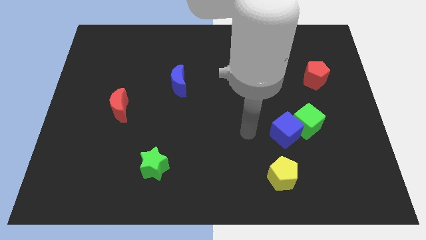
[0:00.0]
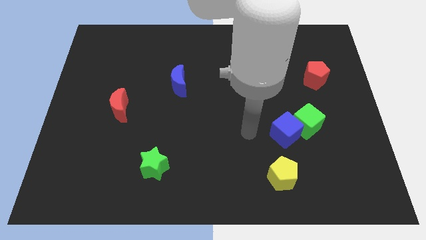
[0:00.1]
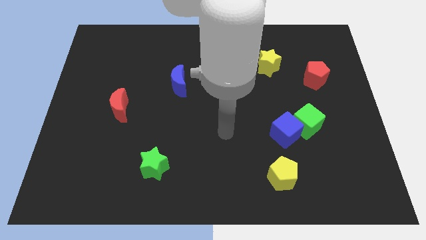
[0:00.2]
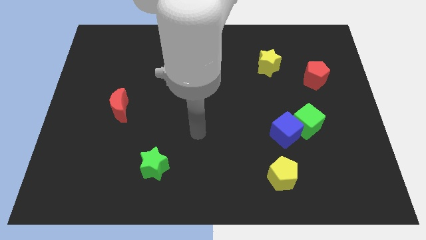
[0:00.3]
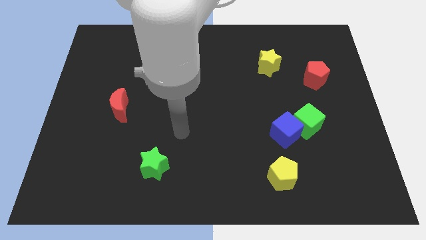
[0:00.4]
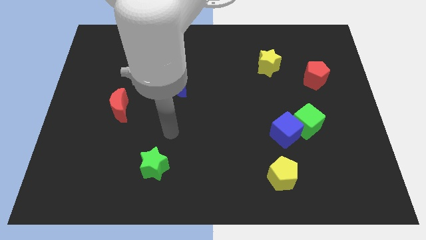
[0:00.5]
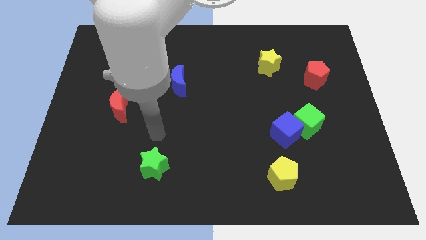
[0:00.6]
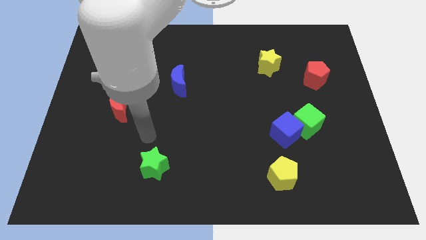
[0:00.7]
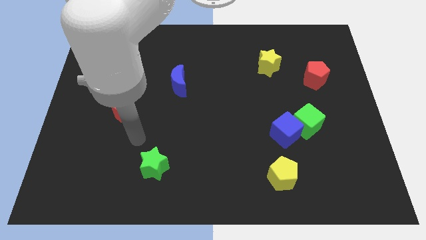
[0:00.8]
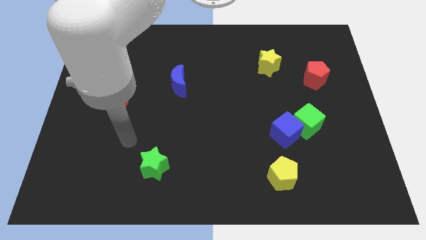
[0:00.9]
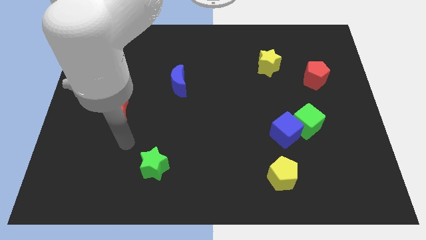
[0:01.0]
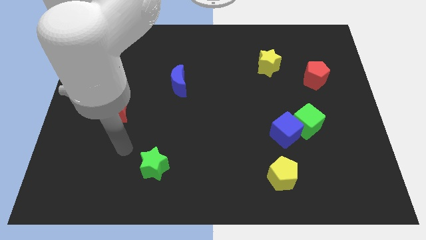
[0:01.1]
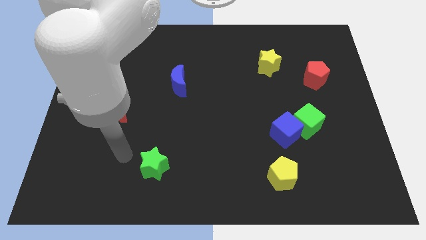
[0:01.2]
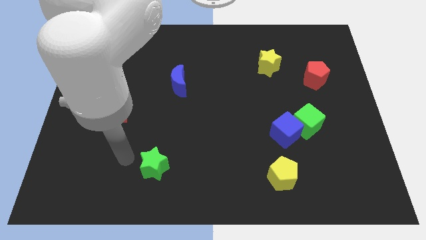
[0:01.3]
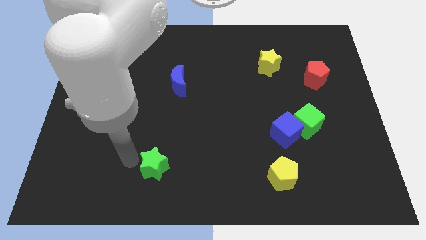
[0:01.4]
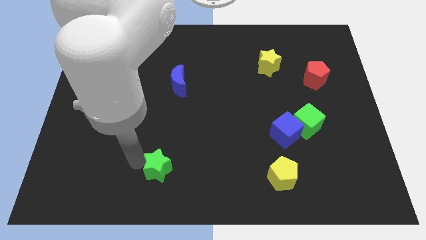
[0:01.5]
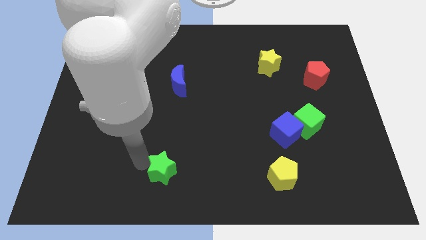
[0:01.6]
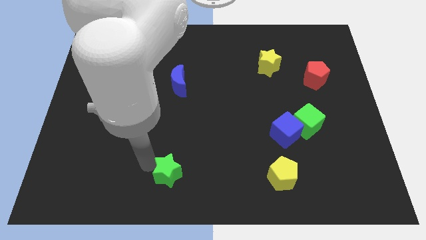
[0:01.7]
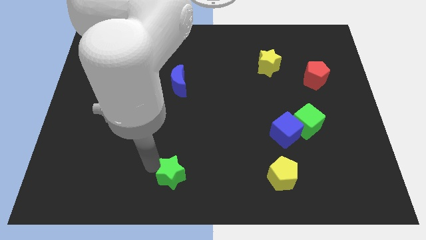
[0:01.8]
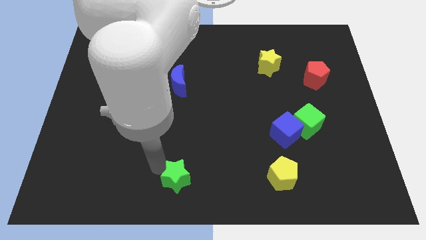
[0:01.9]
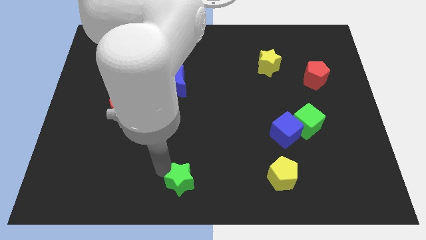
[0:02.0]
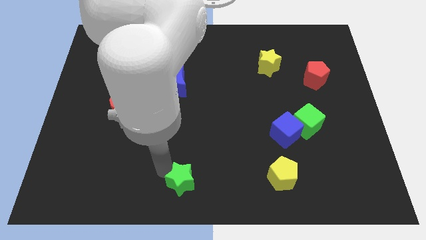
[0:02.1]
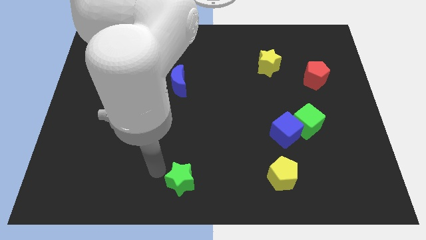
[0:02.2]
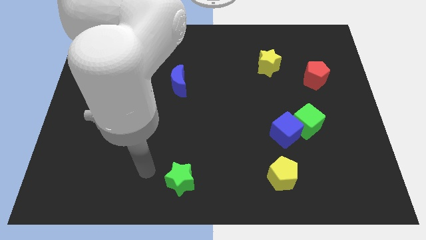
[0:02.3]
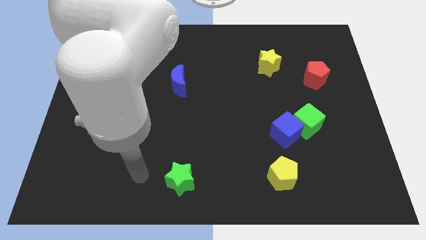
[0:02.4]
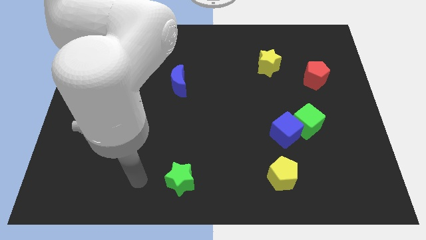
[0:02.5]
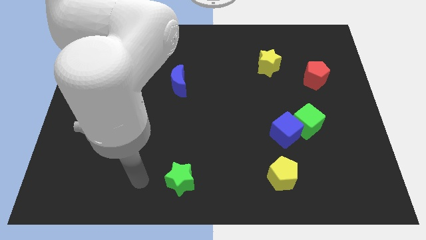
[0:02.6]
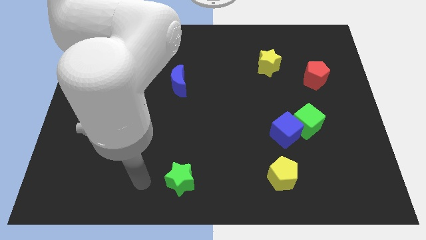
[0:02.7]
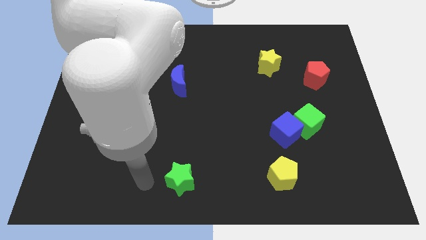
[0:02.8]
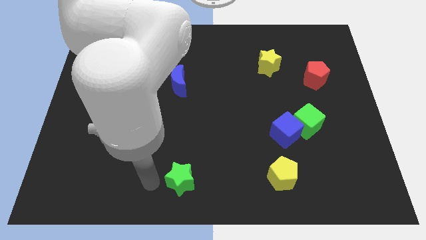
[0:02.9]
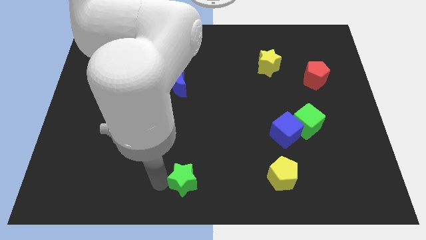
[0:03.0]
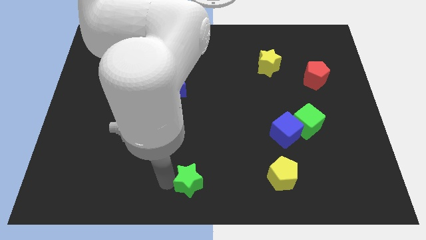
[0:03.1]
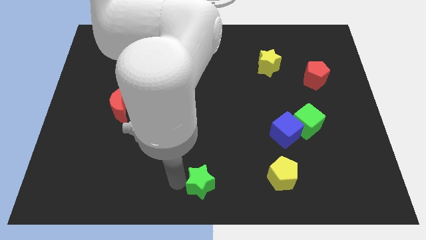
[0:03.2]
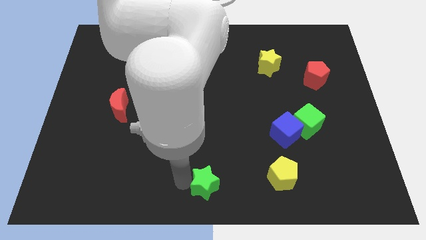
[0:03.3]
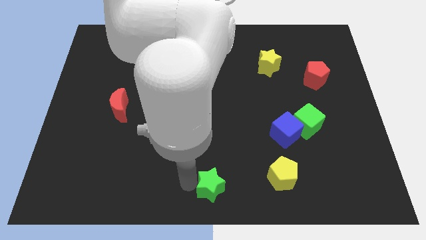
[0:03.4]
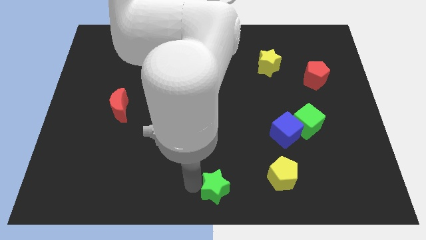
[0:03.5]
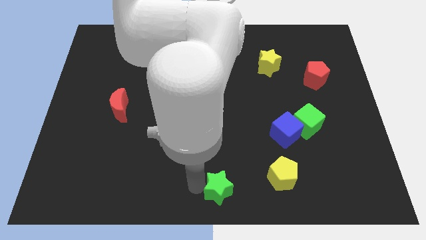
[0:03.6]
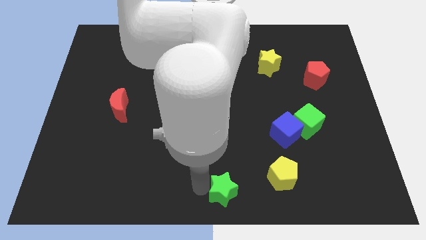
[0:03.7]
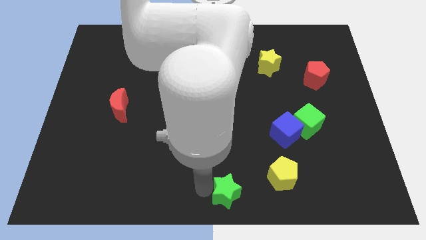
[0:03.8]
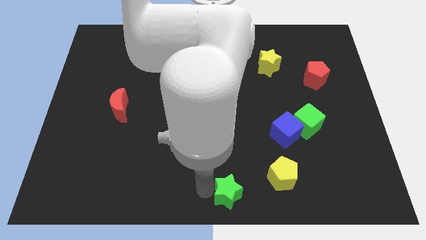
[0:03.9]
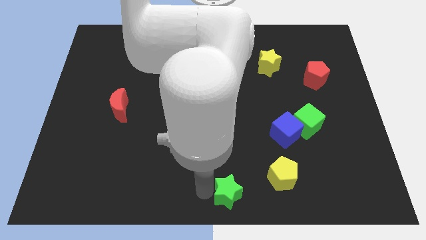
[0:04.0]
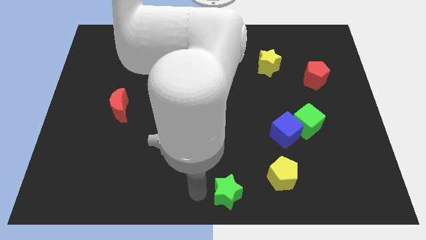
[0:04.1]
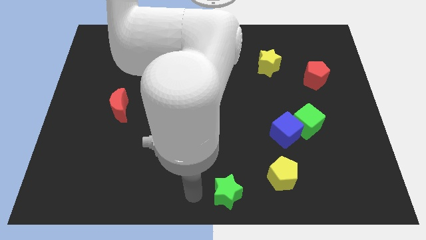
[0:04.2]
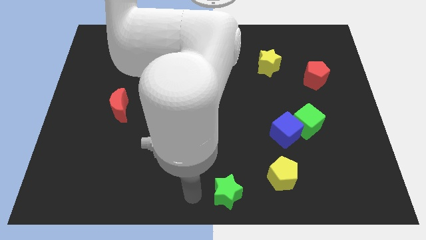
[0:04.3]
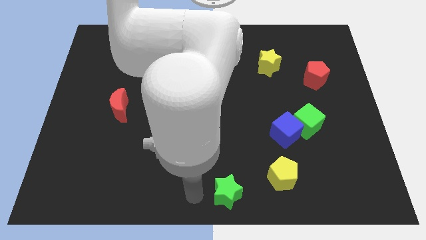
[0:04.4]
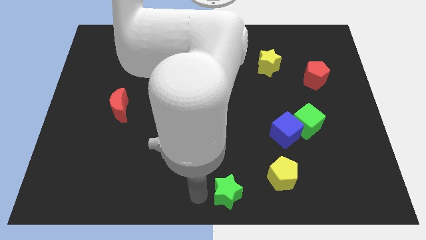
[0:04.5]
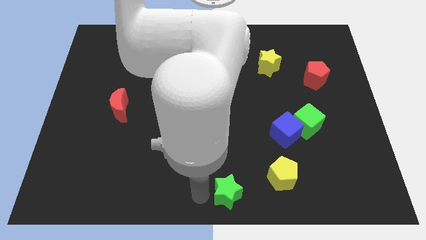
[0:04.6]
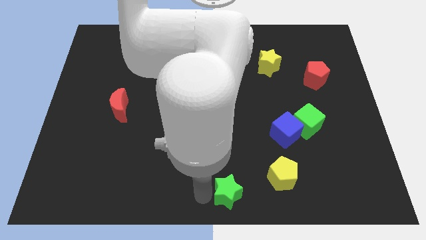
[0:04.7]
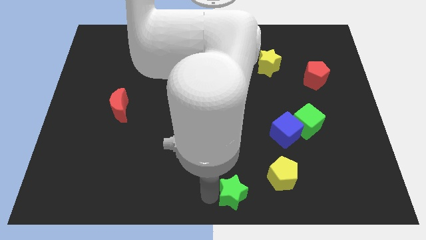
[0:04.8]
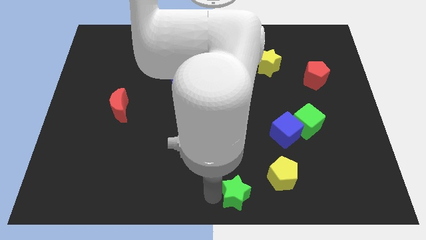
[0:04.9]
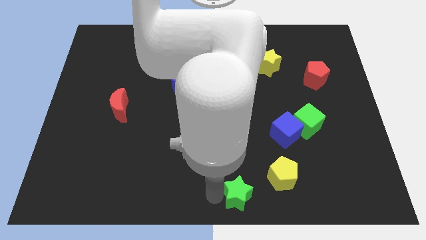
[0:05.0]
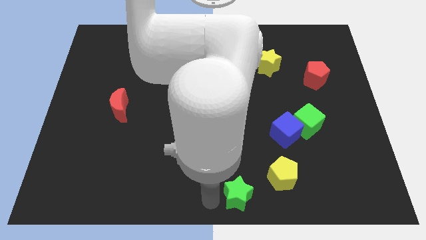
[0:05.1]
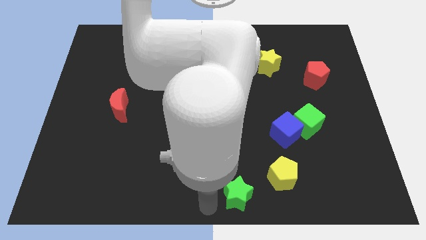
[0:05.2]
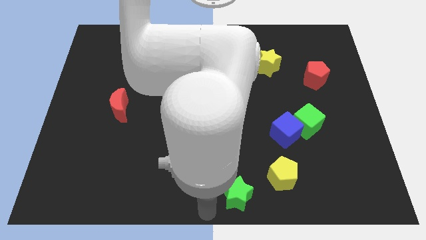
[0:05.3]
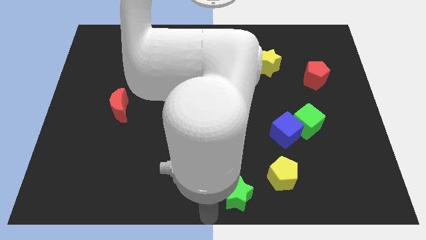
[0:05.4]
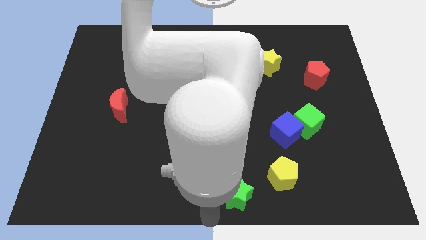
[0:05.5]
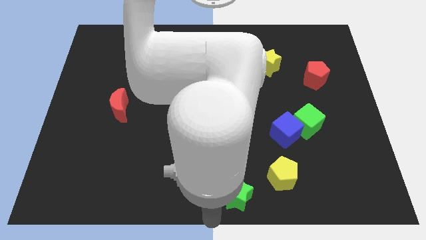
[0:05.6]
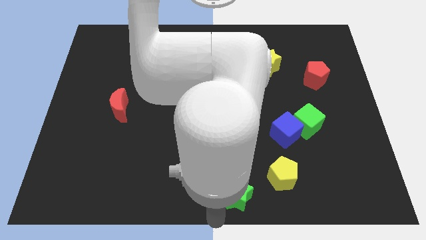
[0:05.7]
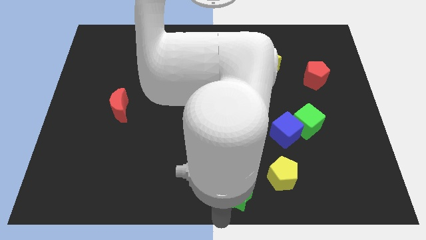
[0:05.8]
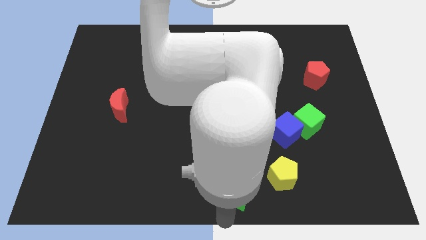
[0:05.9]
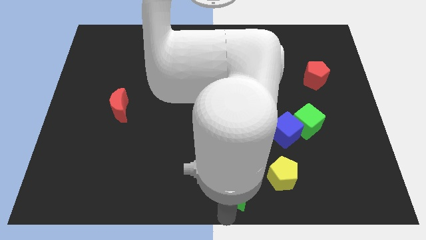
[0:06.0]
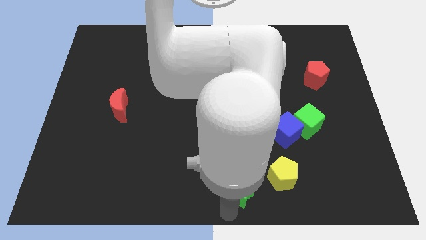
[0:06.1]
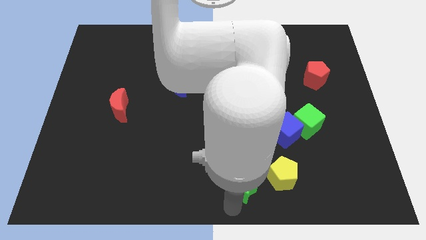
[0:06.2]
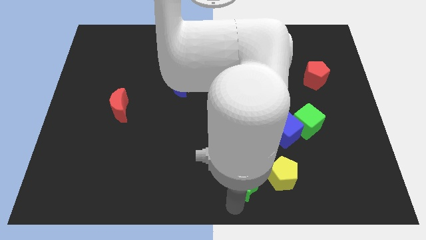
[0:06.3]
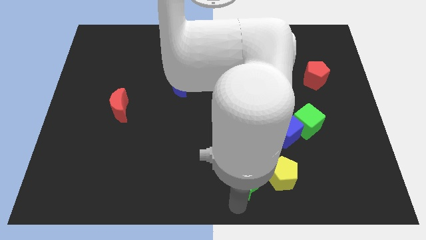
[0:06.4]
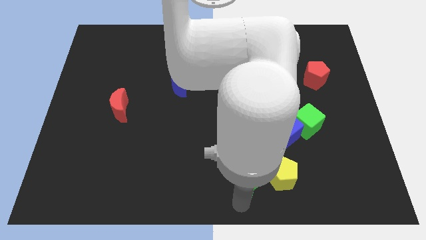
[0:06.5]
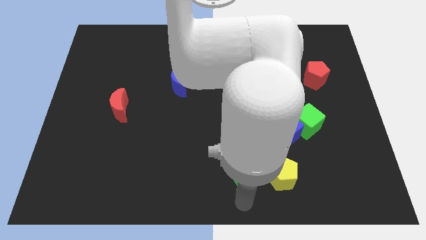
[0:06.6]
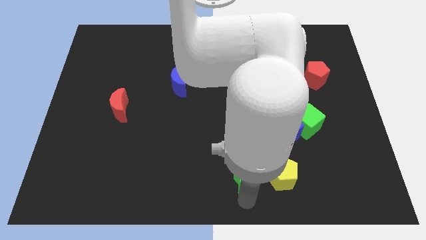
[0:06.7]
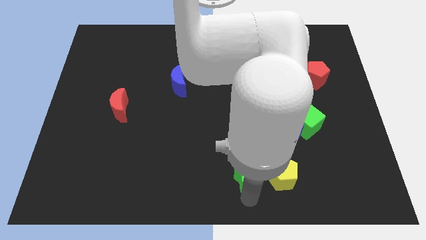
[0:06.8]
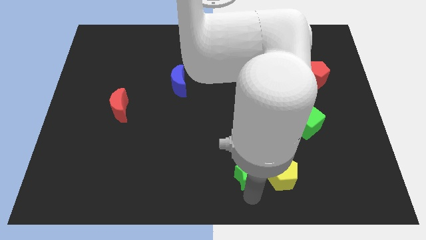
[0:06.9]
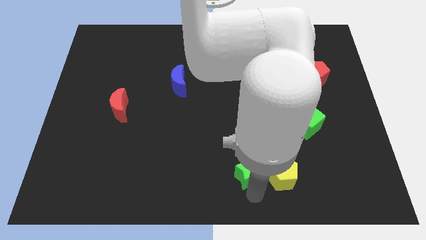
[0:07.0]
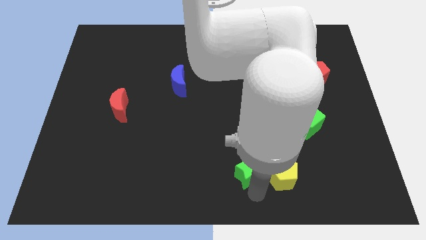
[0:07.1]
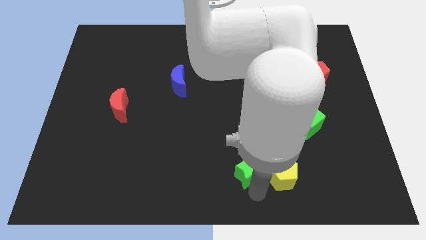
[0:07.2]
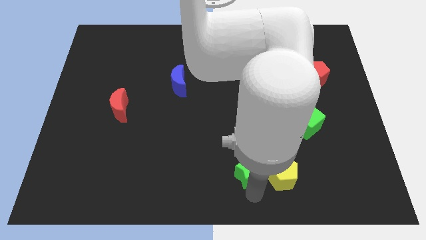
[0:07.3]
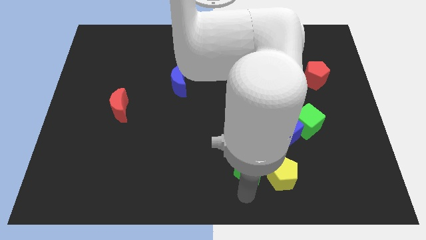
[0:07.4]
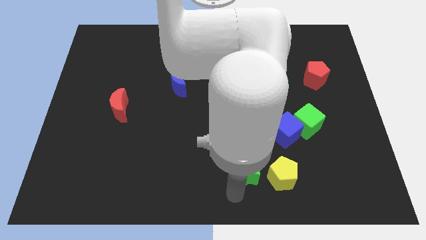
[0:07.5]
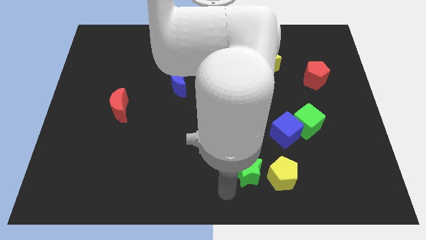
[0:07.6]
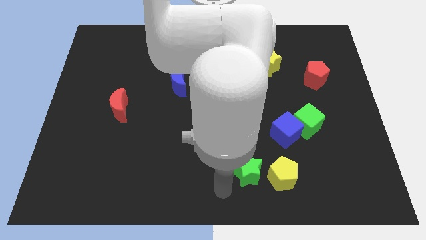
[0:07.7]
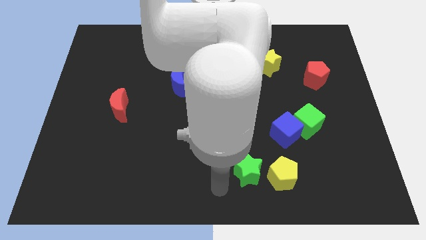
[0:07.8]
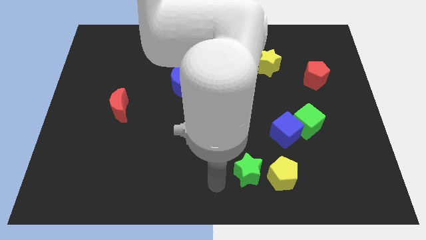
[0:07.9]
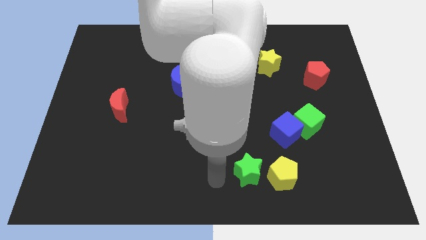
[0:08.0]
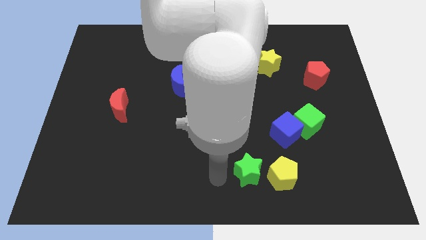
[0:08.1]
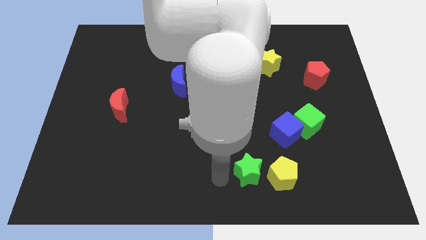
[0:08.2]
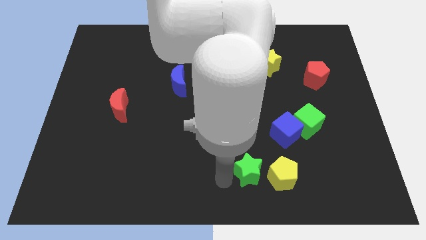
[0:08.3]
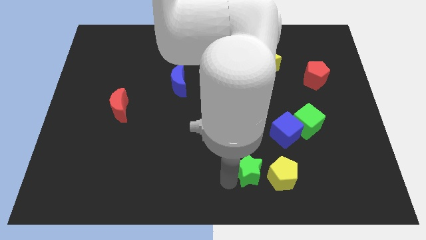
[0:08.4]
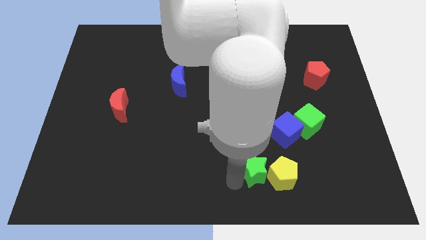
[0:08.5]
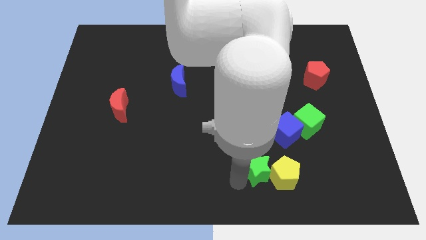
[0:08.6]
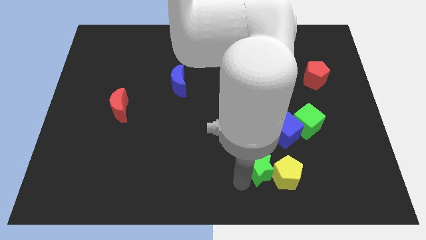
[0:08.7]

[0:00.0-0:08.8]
slide the green star to the yellow pentagon
